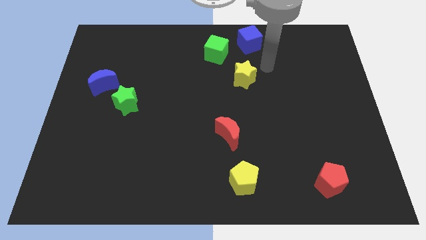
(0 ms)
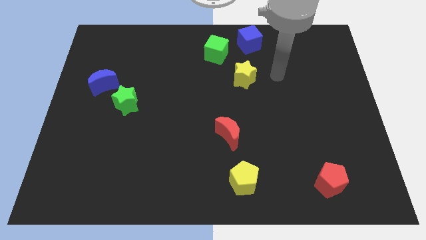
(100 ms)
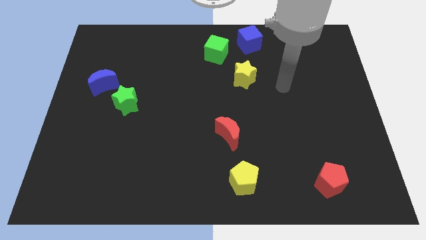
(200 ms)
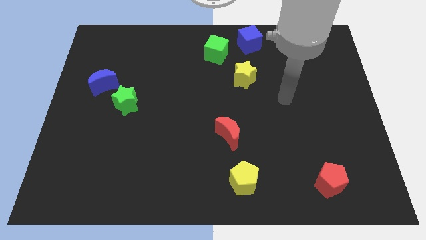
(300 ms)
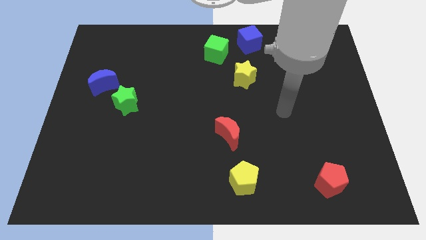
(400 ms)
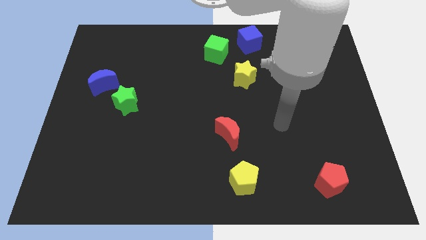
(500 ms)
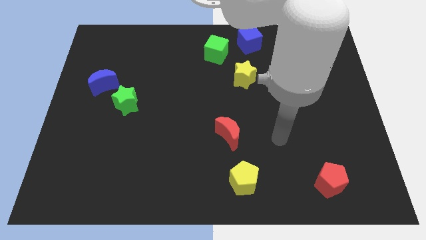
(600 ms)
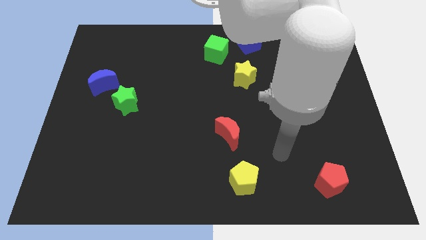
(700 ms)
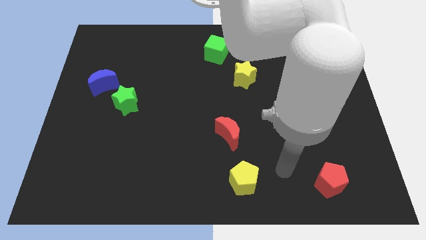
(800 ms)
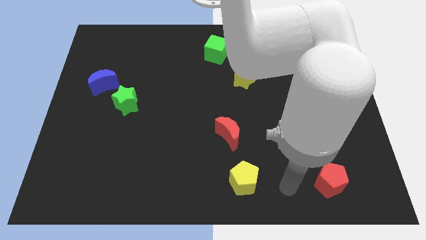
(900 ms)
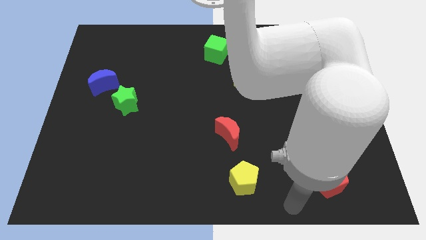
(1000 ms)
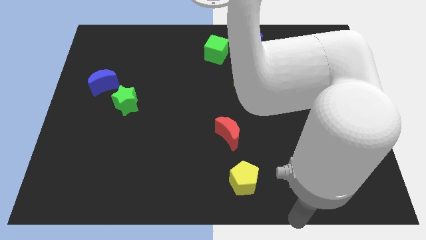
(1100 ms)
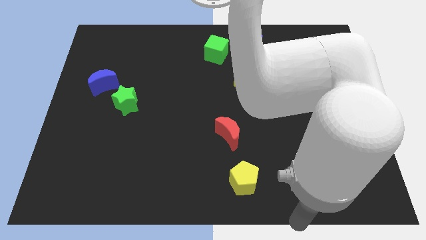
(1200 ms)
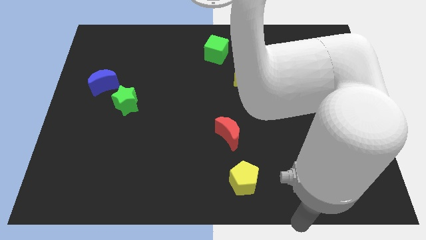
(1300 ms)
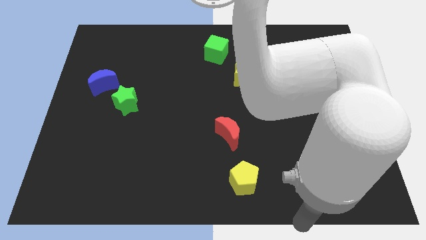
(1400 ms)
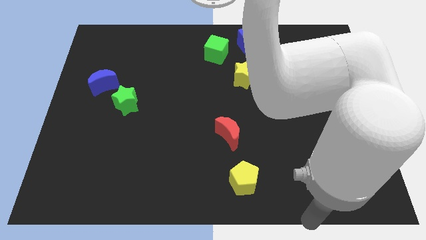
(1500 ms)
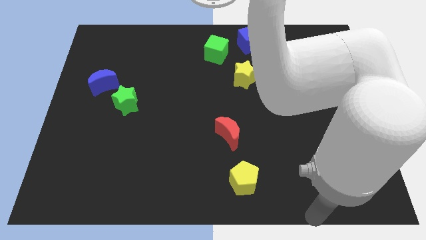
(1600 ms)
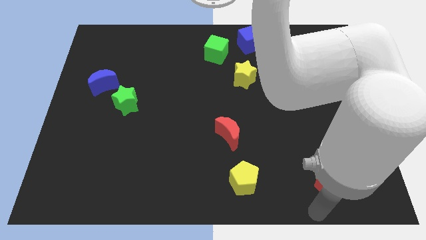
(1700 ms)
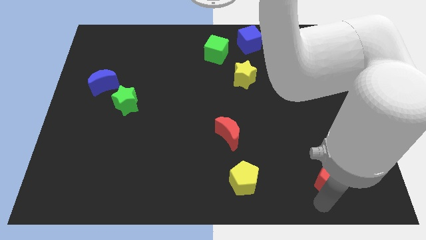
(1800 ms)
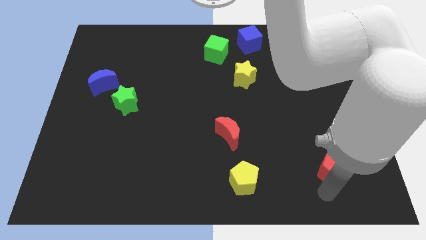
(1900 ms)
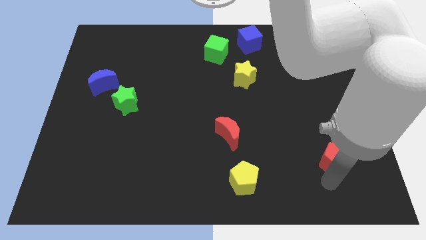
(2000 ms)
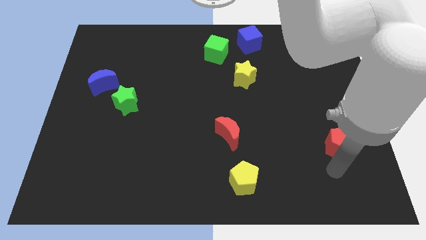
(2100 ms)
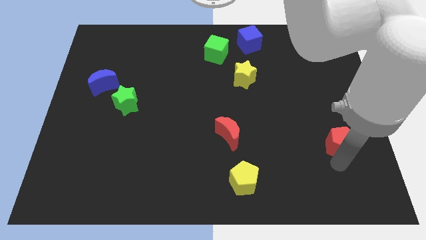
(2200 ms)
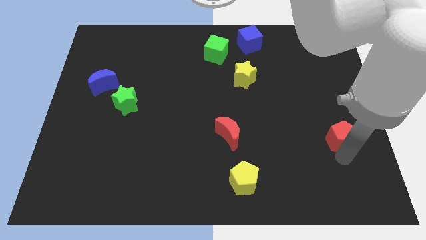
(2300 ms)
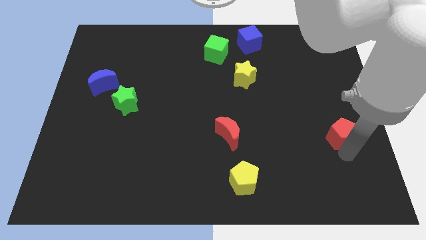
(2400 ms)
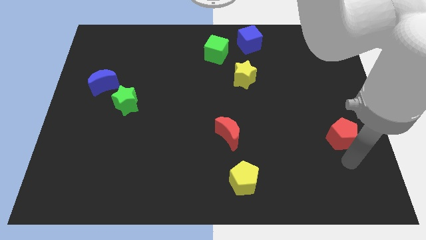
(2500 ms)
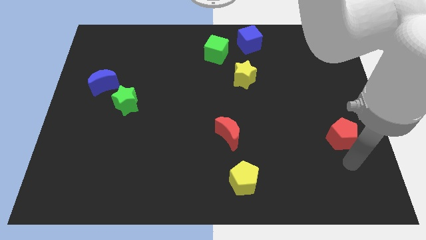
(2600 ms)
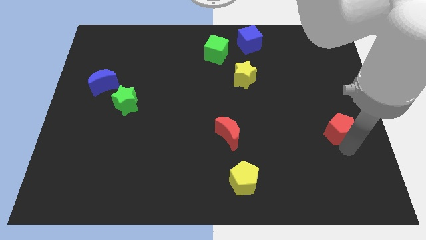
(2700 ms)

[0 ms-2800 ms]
place the red pentagon to the right of the red moon

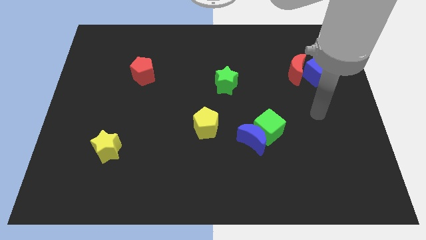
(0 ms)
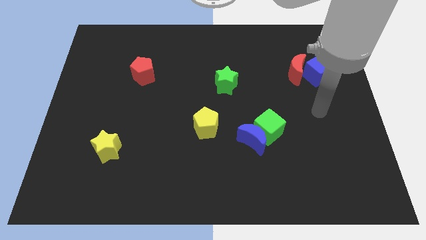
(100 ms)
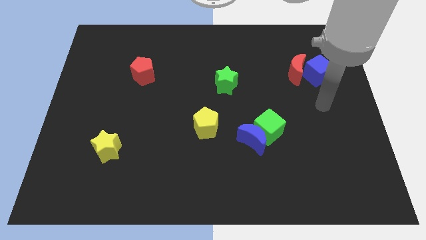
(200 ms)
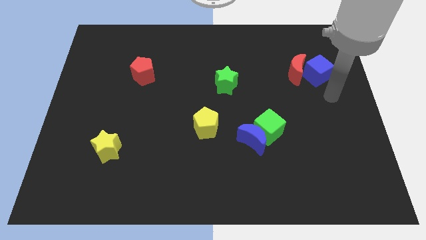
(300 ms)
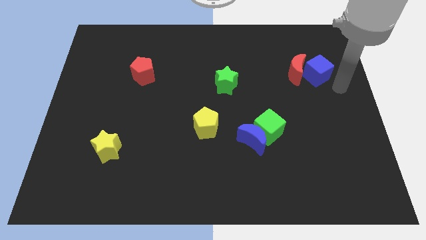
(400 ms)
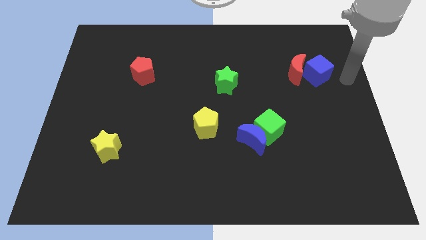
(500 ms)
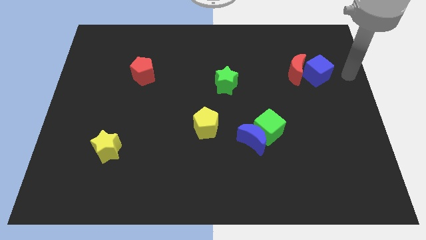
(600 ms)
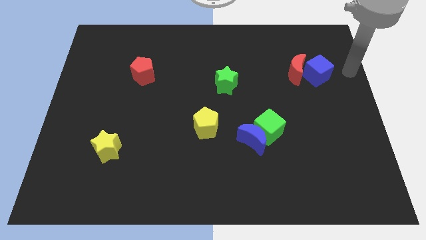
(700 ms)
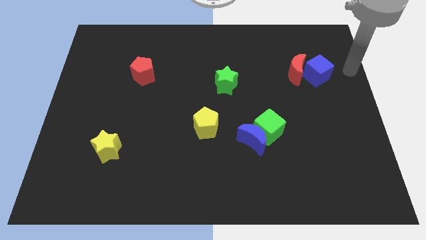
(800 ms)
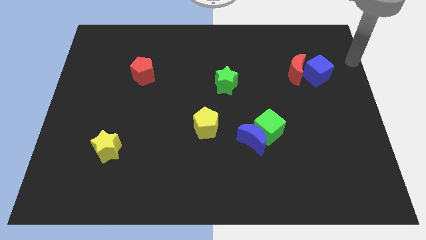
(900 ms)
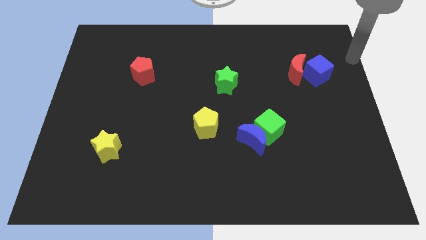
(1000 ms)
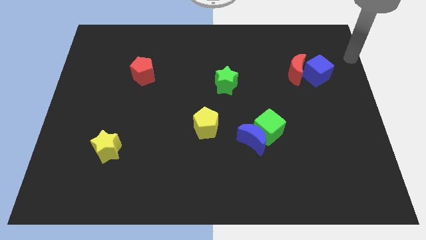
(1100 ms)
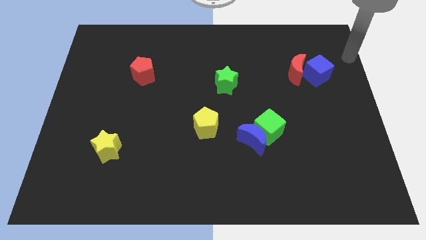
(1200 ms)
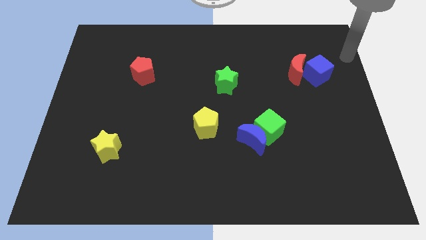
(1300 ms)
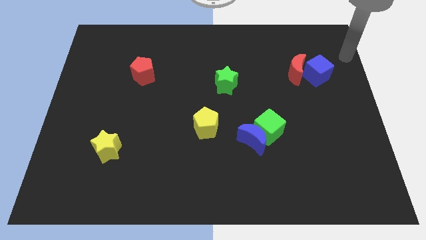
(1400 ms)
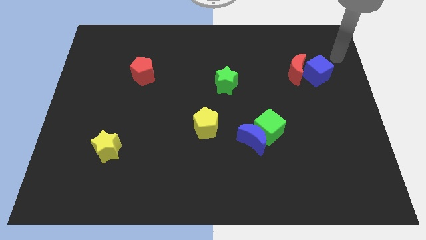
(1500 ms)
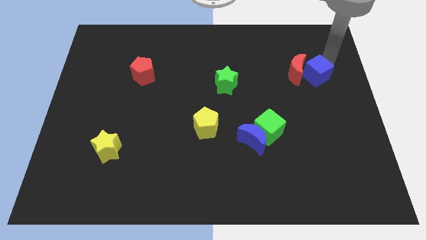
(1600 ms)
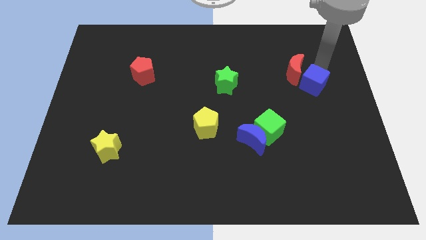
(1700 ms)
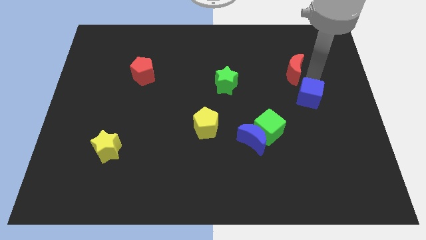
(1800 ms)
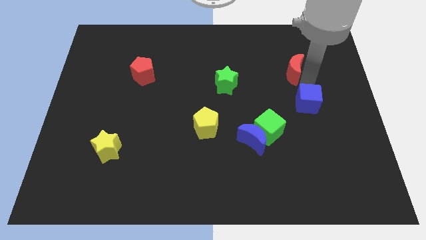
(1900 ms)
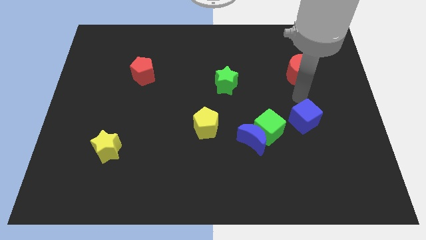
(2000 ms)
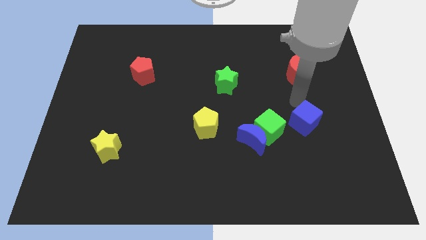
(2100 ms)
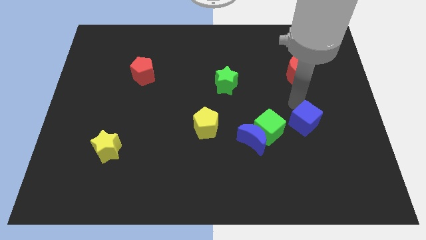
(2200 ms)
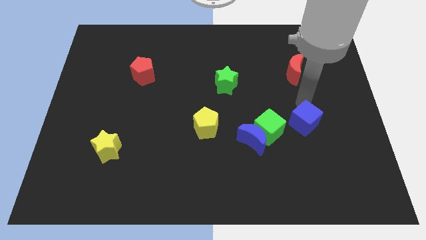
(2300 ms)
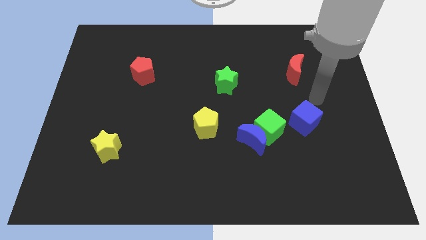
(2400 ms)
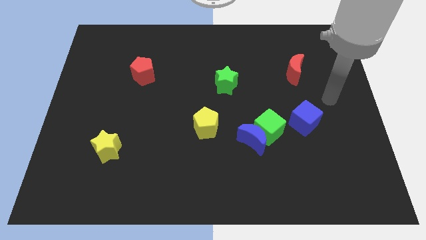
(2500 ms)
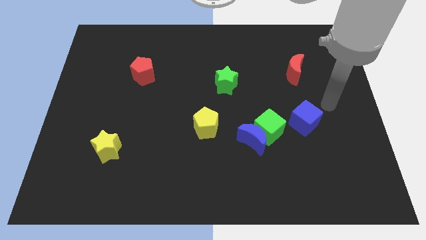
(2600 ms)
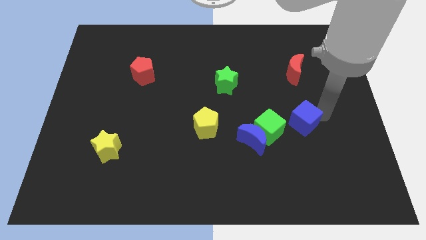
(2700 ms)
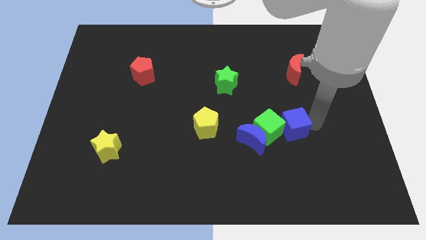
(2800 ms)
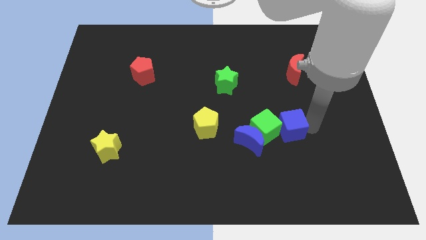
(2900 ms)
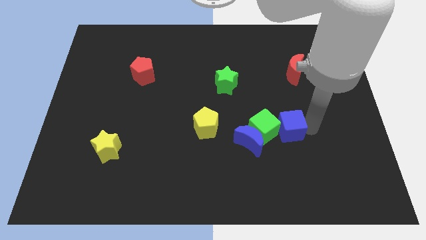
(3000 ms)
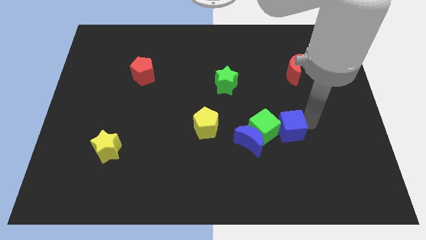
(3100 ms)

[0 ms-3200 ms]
push the blue cube into the green cube

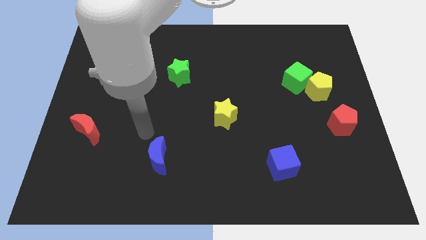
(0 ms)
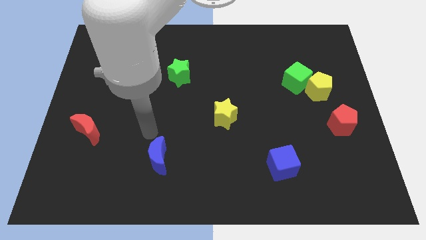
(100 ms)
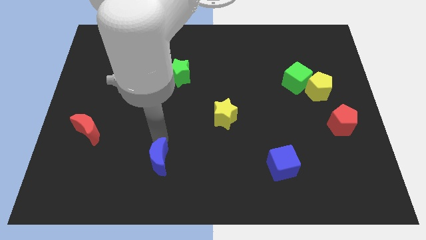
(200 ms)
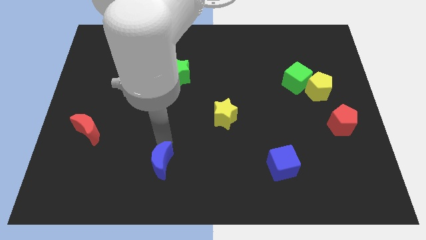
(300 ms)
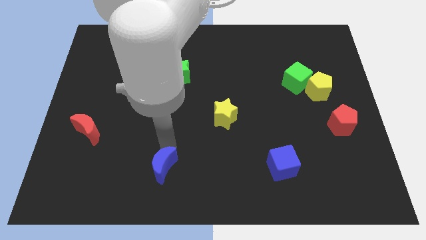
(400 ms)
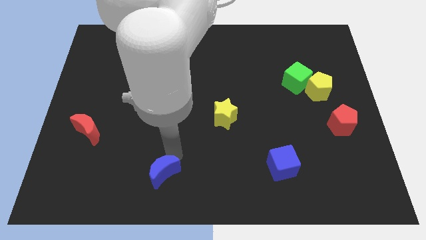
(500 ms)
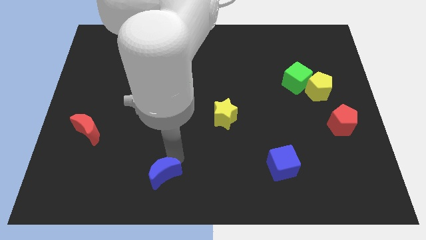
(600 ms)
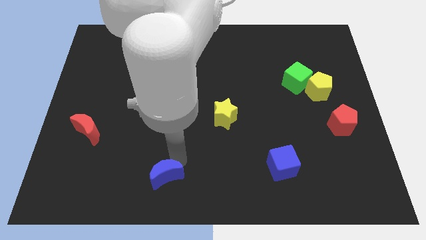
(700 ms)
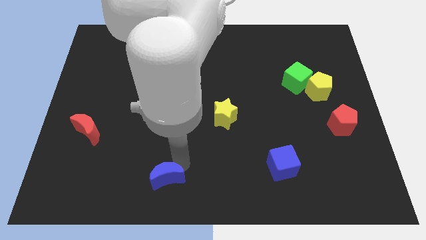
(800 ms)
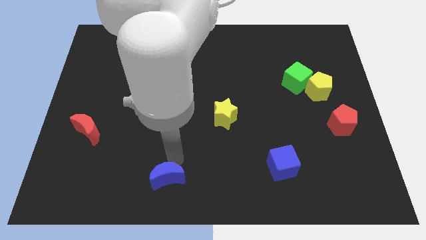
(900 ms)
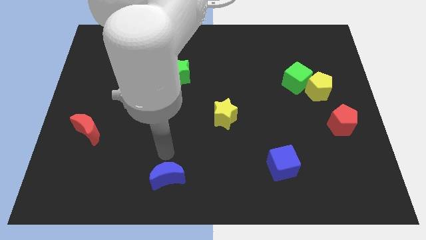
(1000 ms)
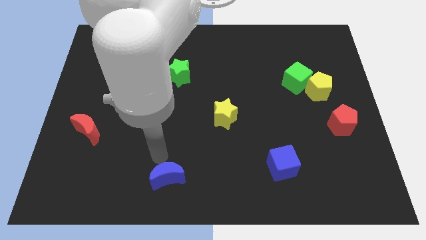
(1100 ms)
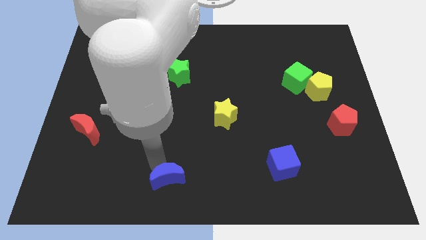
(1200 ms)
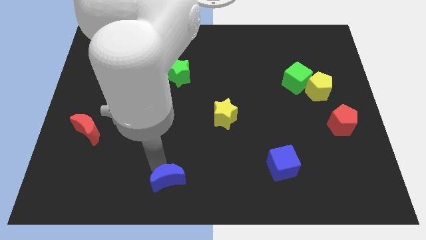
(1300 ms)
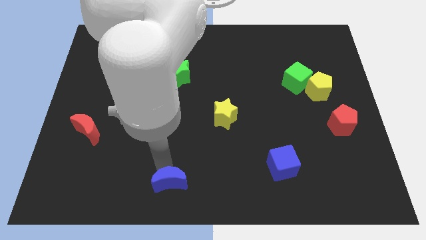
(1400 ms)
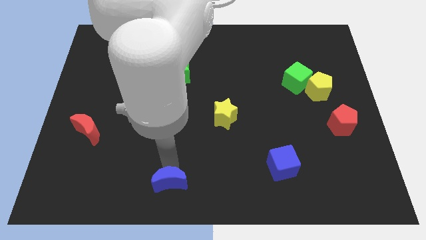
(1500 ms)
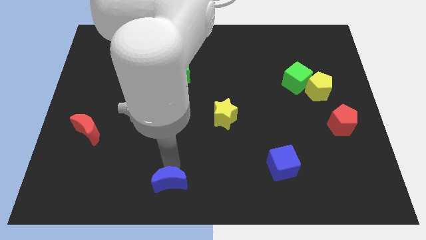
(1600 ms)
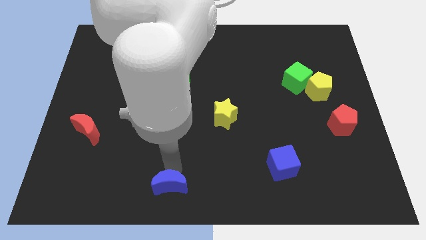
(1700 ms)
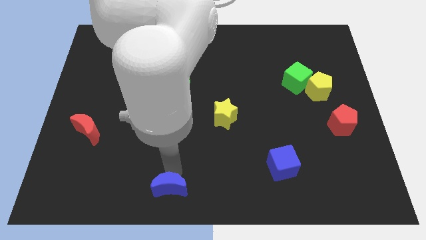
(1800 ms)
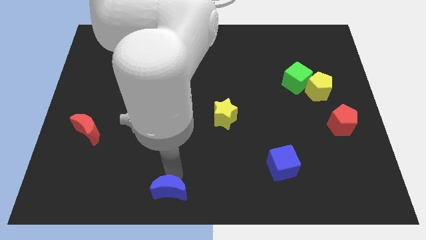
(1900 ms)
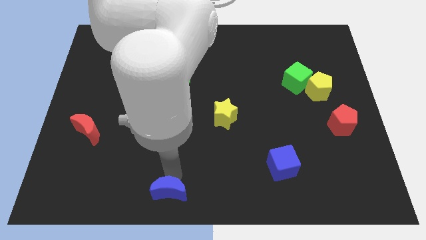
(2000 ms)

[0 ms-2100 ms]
slide the blue moon to the bottom side

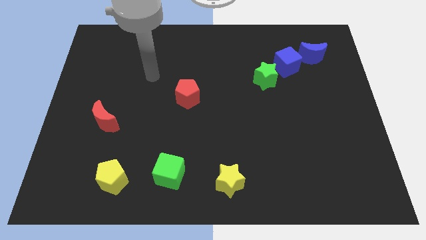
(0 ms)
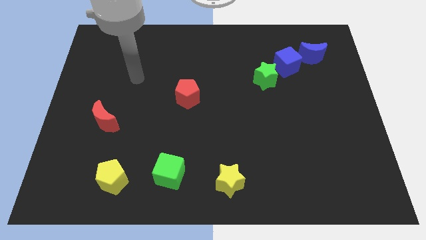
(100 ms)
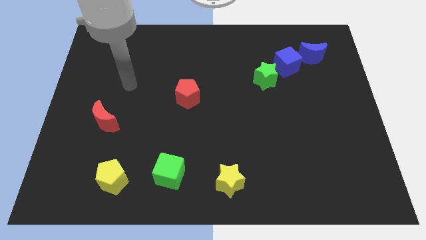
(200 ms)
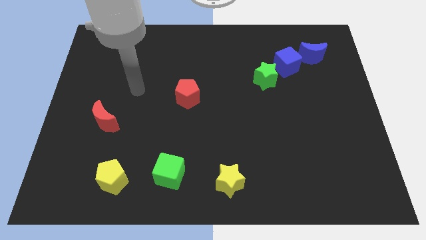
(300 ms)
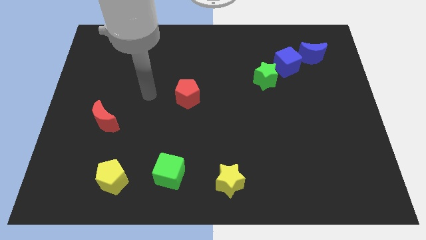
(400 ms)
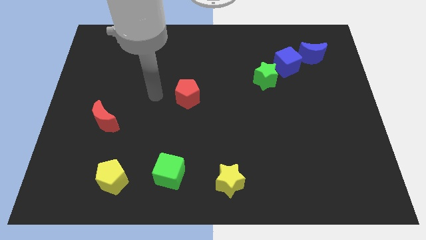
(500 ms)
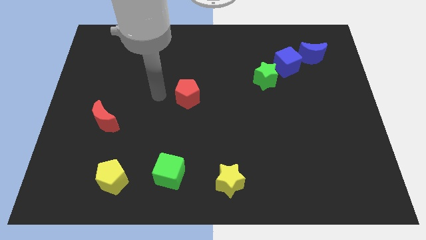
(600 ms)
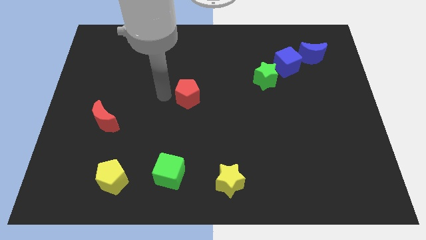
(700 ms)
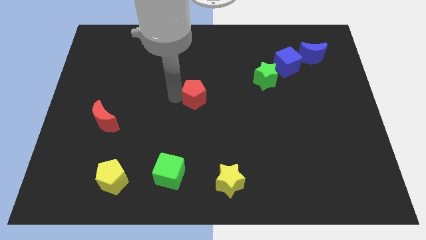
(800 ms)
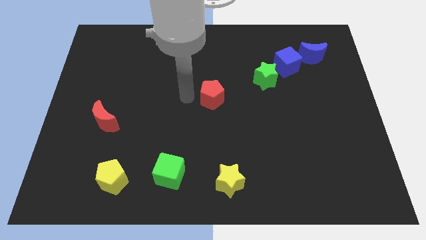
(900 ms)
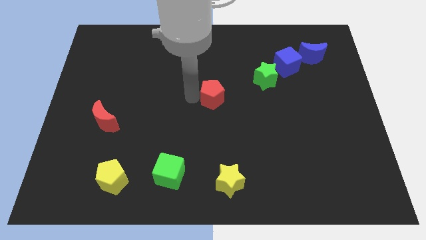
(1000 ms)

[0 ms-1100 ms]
move red pentagon to the center
